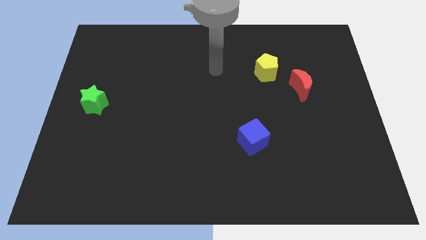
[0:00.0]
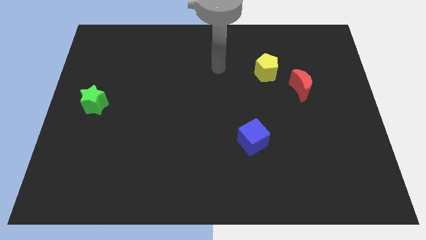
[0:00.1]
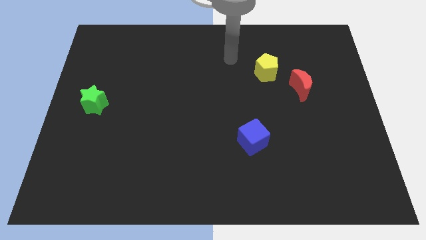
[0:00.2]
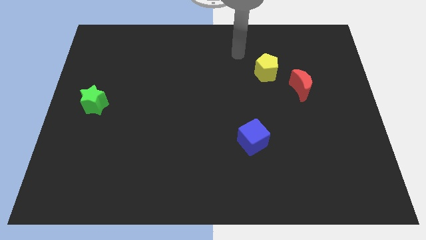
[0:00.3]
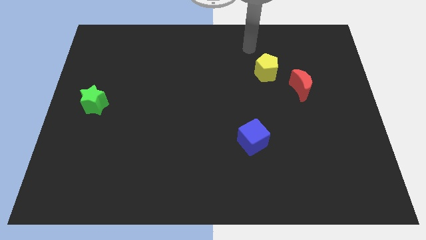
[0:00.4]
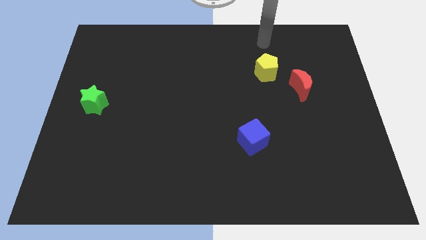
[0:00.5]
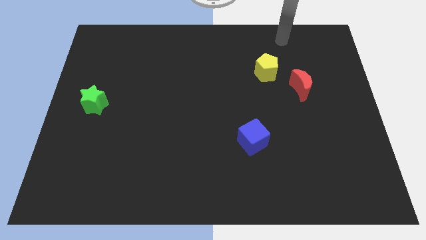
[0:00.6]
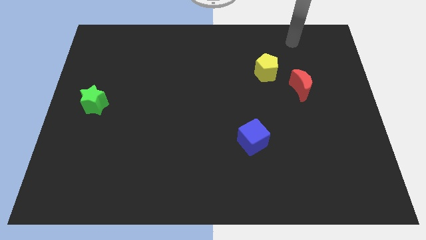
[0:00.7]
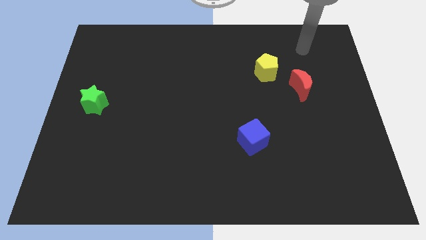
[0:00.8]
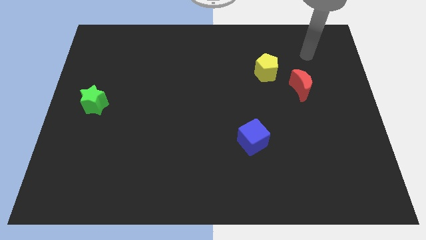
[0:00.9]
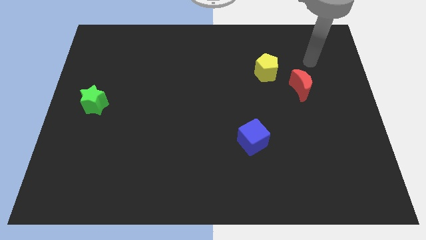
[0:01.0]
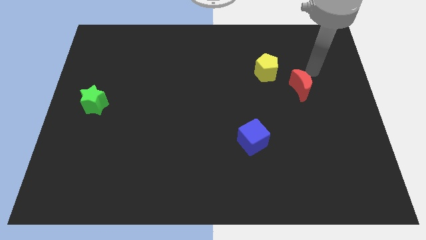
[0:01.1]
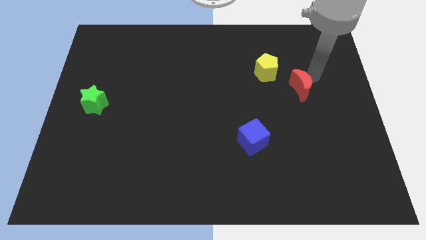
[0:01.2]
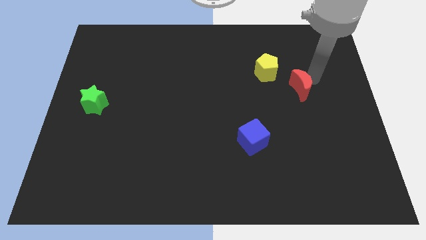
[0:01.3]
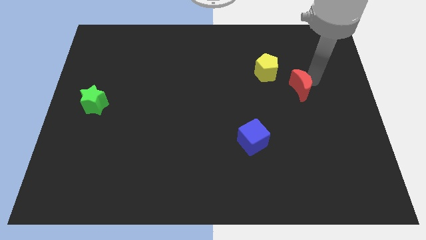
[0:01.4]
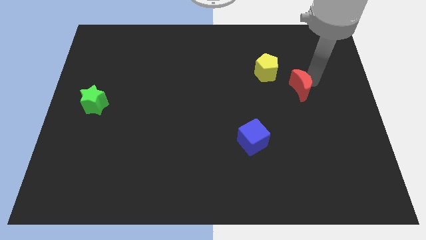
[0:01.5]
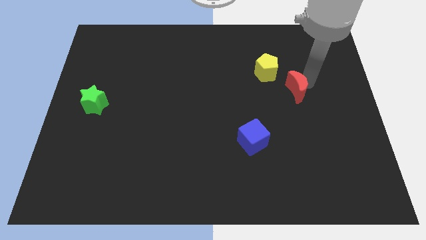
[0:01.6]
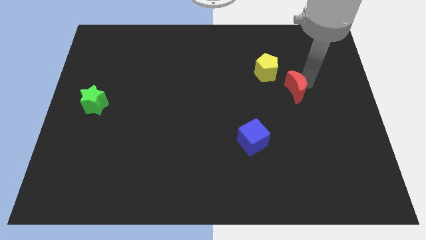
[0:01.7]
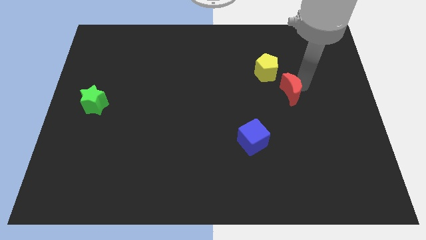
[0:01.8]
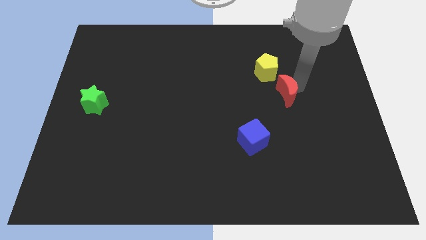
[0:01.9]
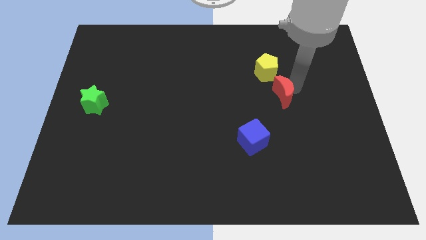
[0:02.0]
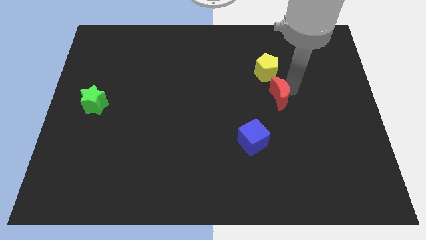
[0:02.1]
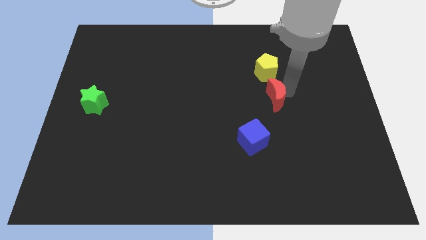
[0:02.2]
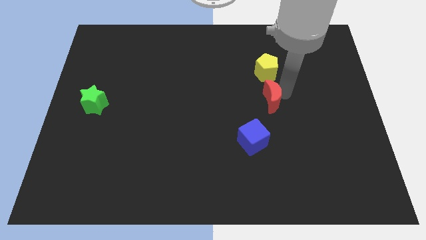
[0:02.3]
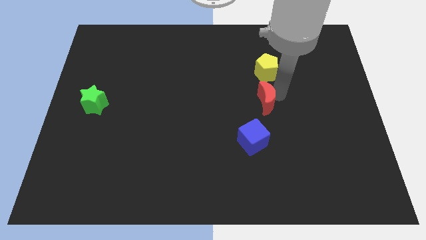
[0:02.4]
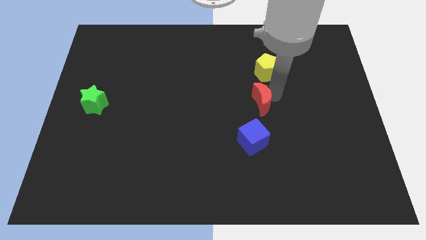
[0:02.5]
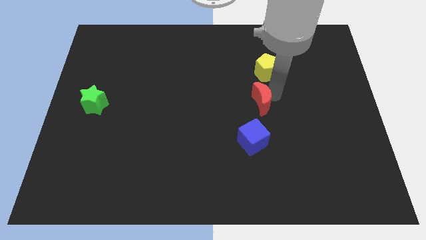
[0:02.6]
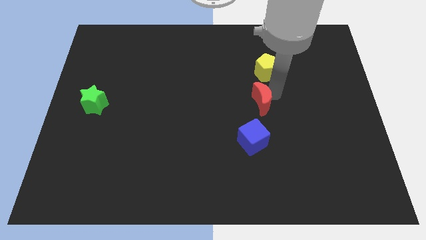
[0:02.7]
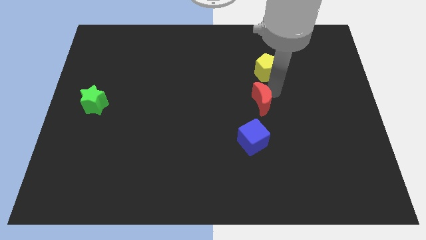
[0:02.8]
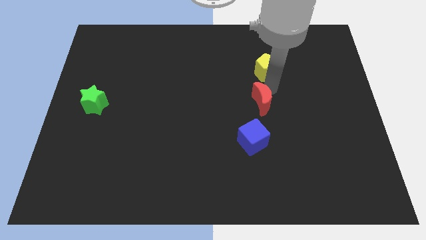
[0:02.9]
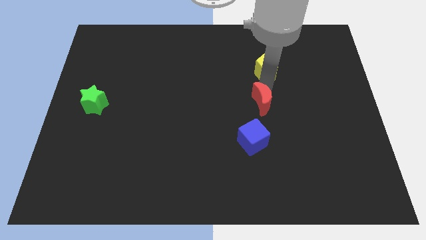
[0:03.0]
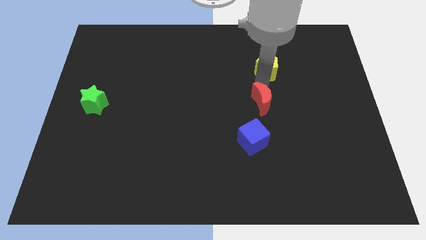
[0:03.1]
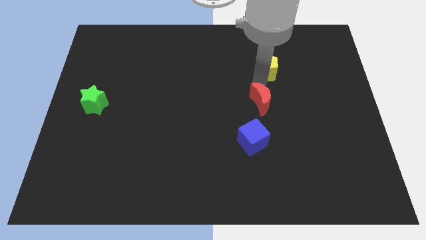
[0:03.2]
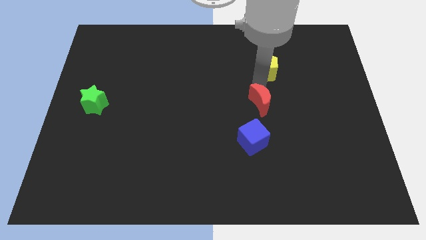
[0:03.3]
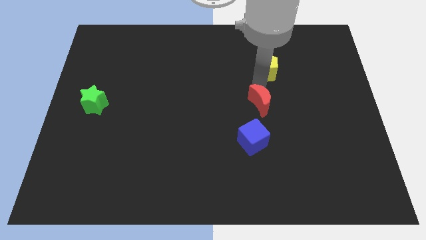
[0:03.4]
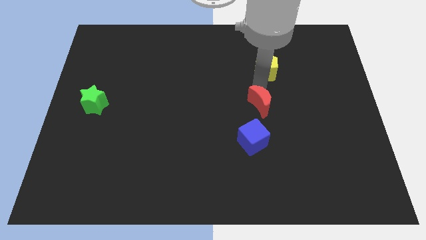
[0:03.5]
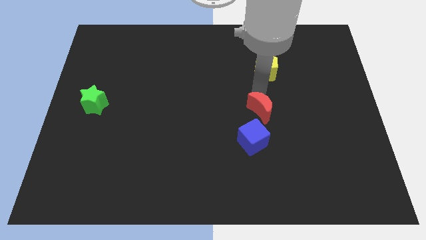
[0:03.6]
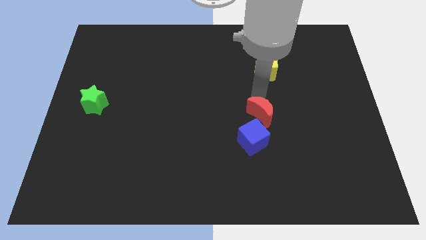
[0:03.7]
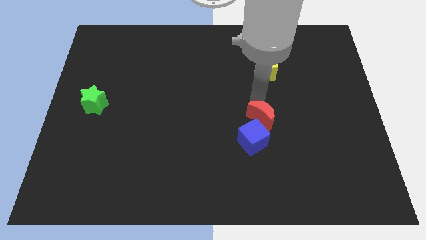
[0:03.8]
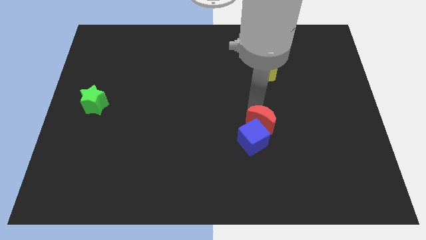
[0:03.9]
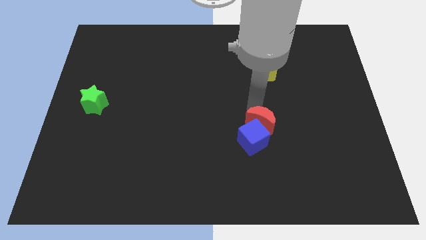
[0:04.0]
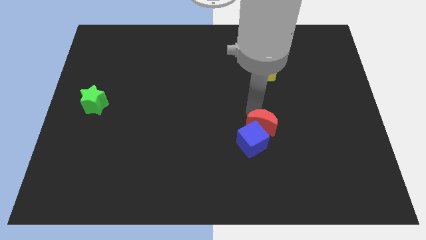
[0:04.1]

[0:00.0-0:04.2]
move the red block towards the blue cube

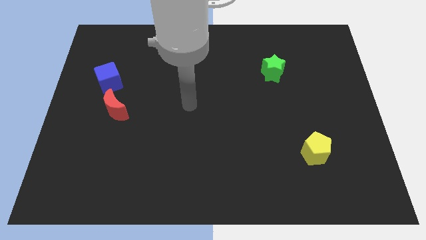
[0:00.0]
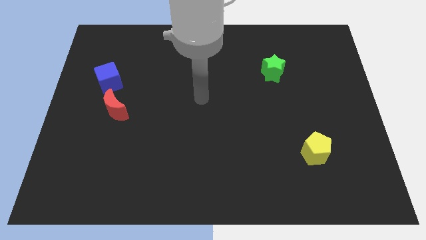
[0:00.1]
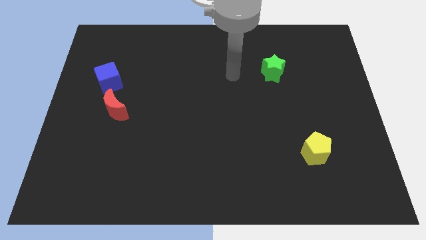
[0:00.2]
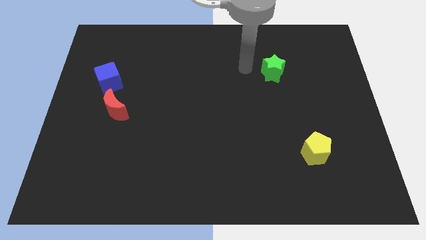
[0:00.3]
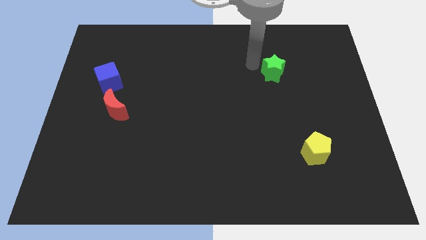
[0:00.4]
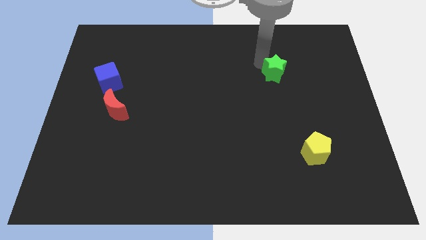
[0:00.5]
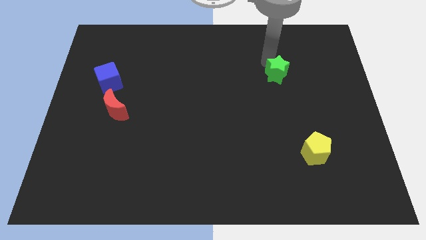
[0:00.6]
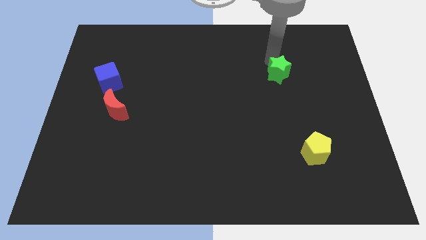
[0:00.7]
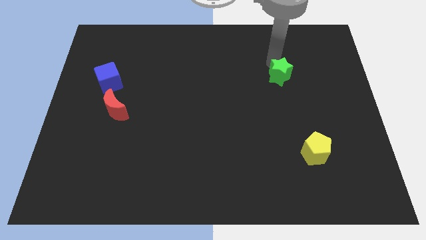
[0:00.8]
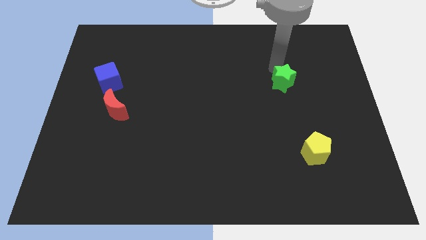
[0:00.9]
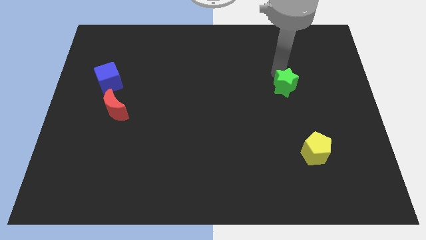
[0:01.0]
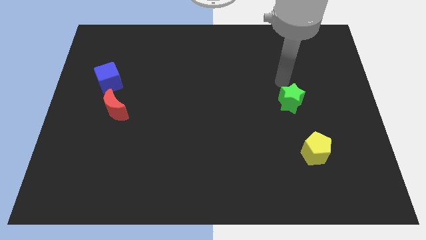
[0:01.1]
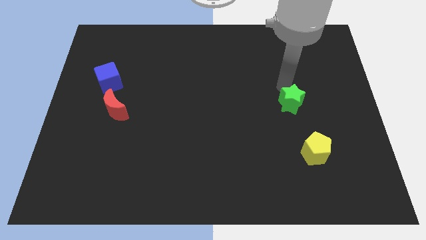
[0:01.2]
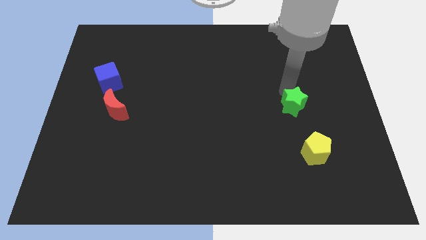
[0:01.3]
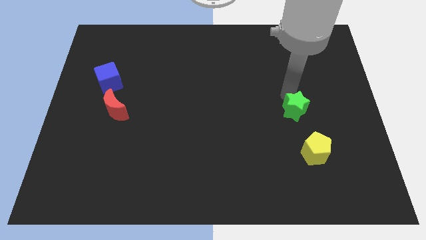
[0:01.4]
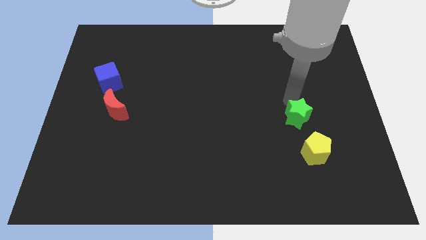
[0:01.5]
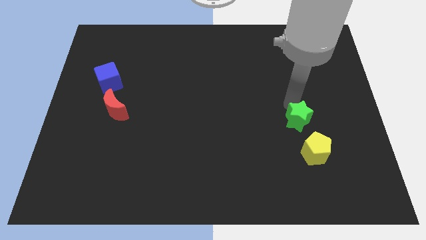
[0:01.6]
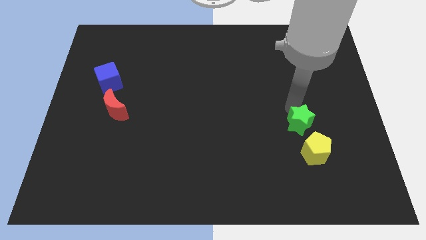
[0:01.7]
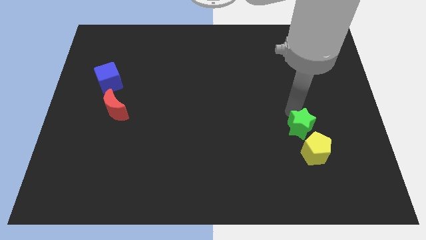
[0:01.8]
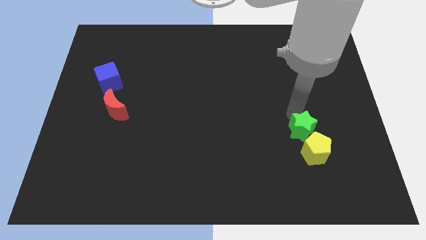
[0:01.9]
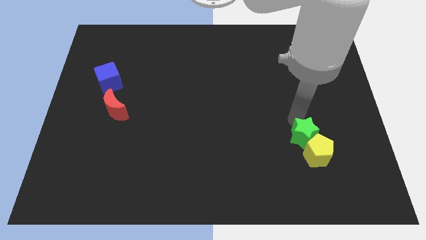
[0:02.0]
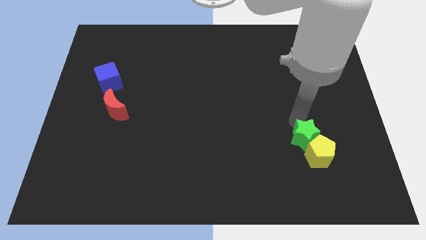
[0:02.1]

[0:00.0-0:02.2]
push the star next to the yellow pentagon

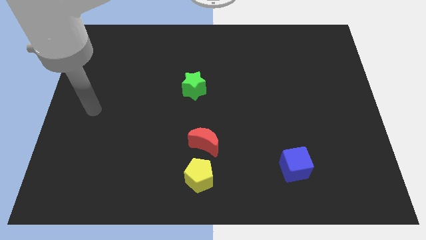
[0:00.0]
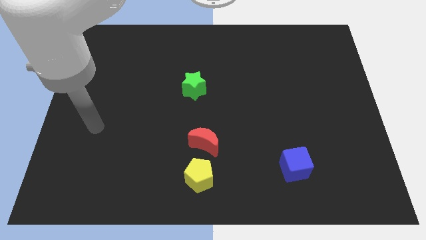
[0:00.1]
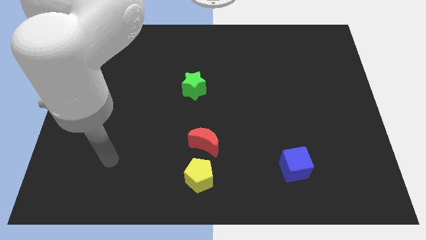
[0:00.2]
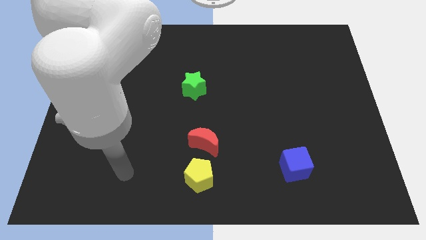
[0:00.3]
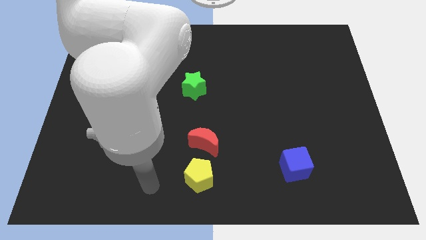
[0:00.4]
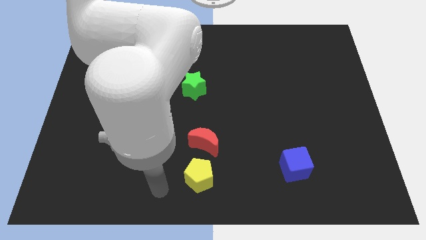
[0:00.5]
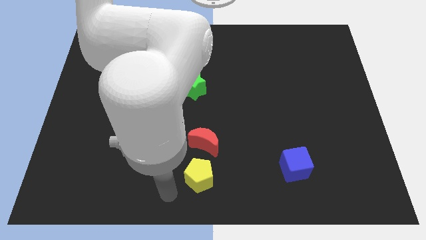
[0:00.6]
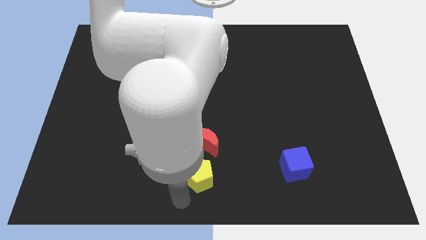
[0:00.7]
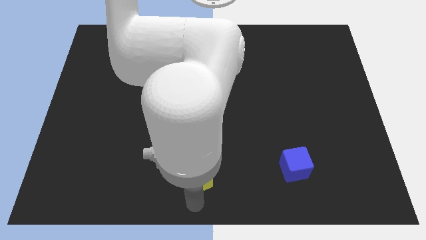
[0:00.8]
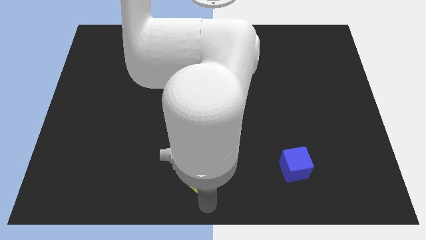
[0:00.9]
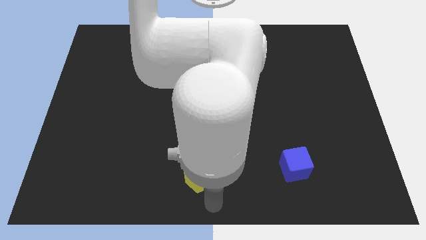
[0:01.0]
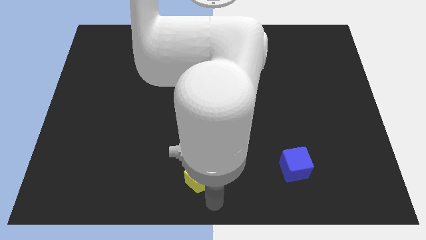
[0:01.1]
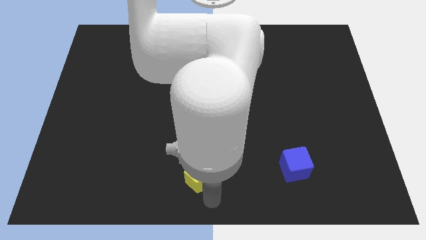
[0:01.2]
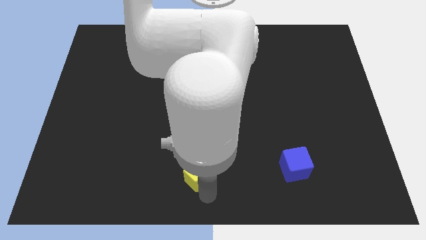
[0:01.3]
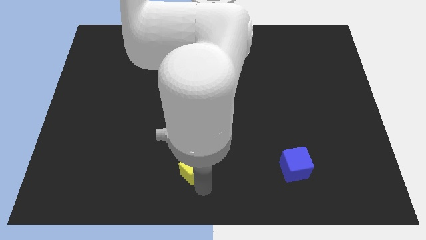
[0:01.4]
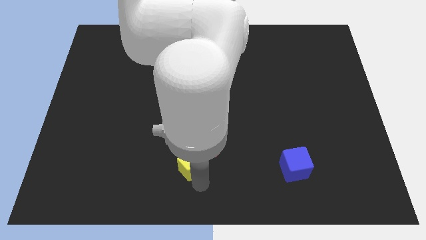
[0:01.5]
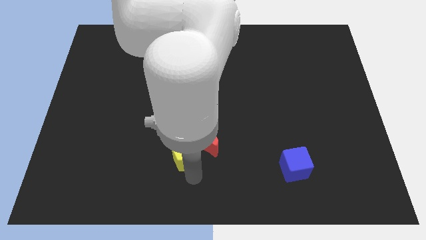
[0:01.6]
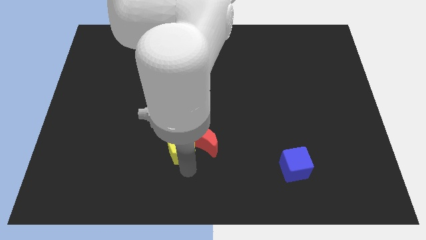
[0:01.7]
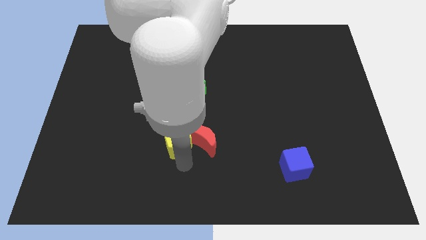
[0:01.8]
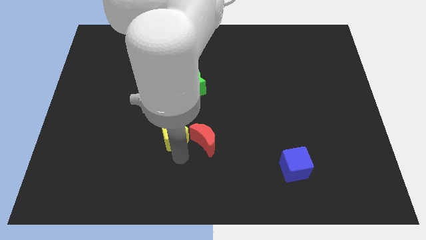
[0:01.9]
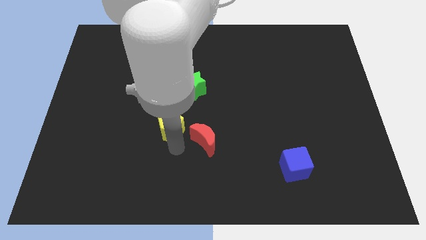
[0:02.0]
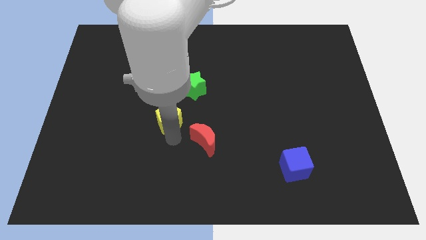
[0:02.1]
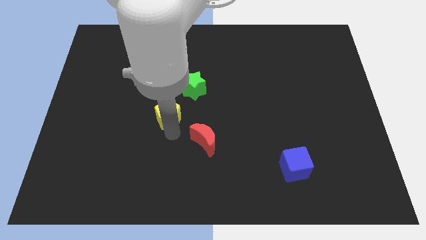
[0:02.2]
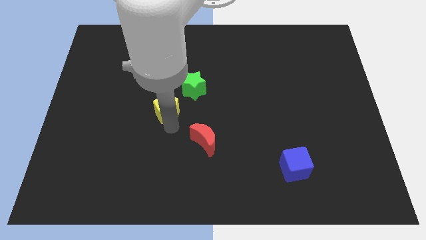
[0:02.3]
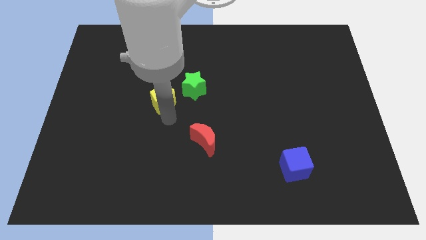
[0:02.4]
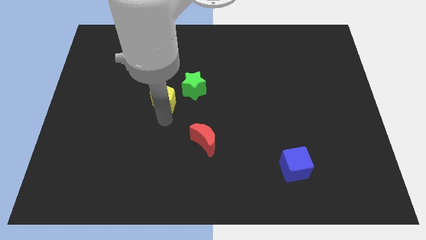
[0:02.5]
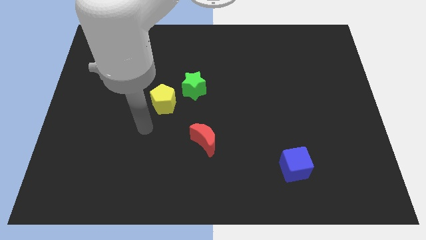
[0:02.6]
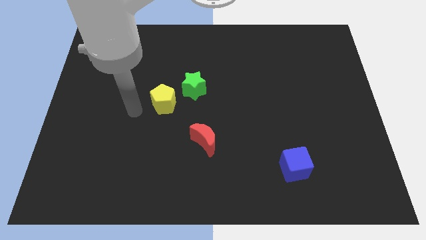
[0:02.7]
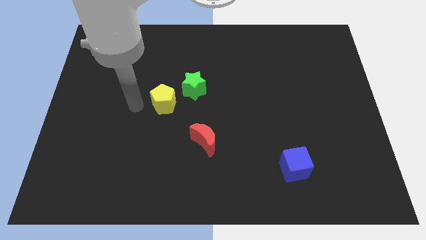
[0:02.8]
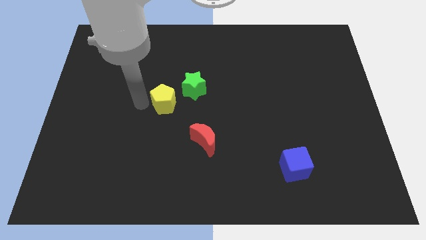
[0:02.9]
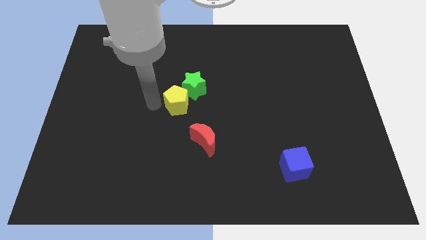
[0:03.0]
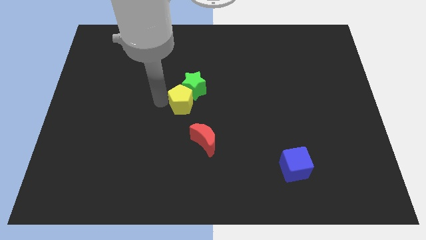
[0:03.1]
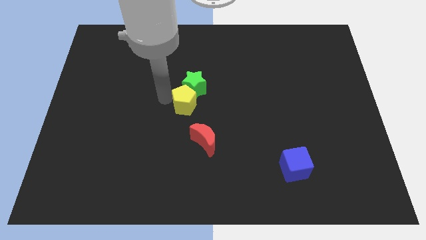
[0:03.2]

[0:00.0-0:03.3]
push the yellow pentagon towards the green block
